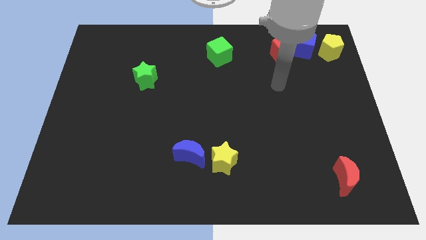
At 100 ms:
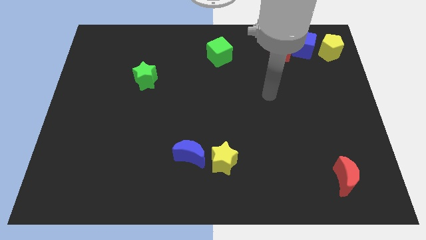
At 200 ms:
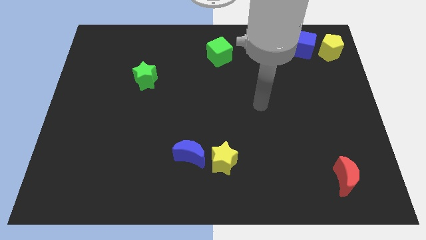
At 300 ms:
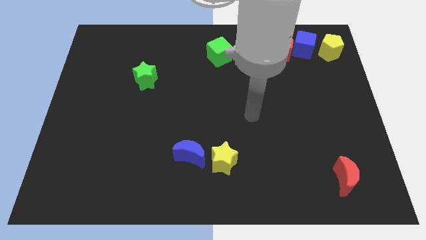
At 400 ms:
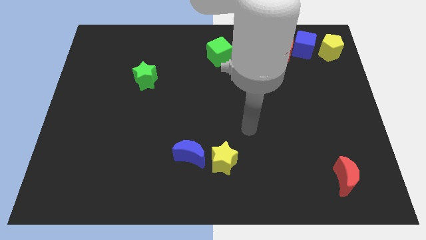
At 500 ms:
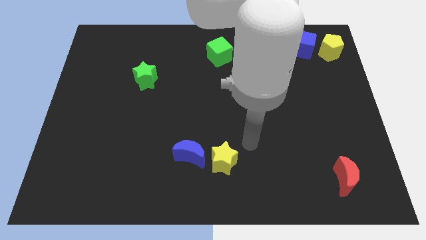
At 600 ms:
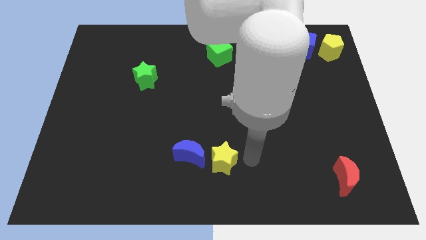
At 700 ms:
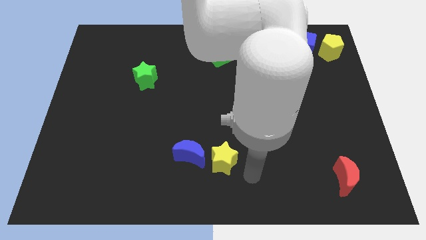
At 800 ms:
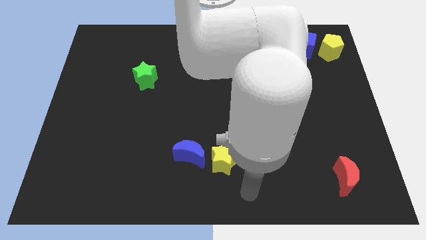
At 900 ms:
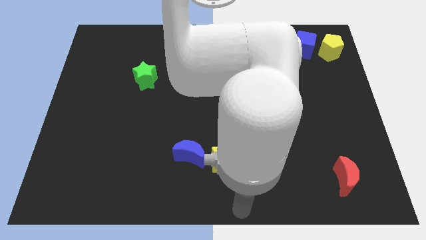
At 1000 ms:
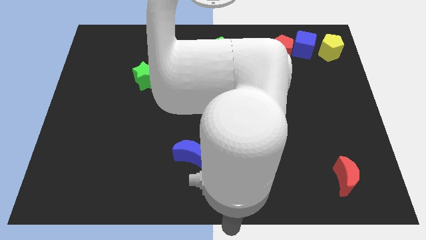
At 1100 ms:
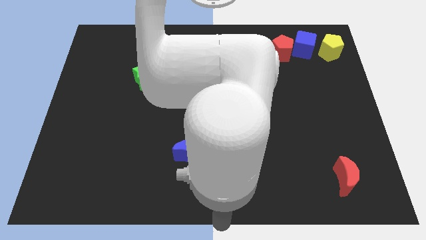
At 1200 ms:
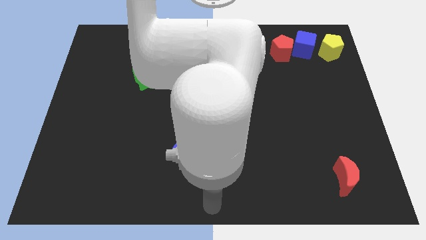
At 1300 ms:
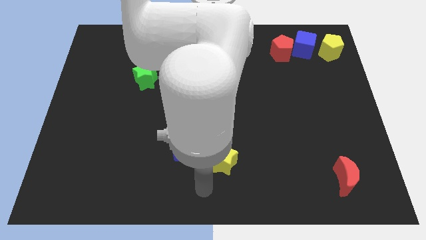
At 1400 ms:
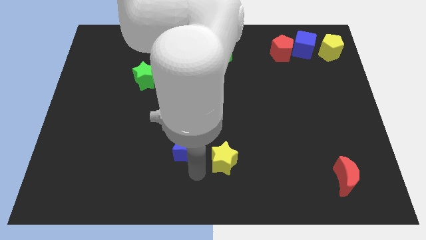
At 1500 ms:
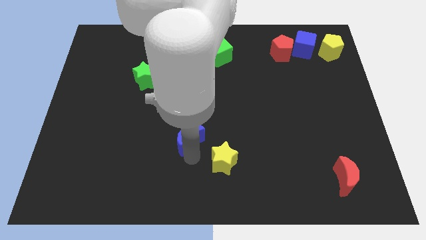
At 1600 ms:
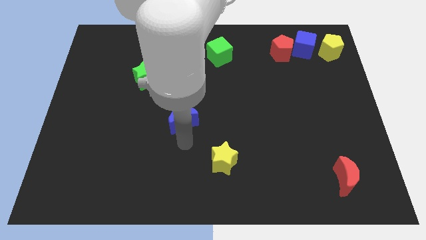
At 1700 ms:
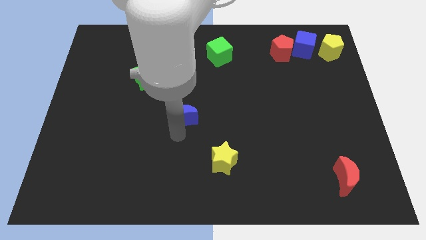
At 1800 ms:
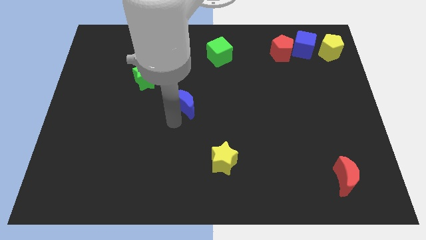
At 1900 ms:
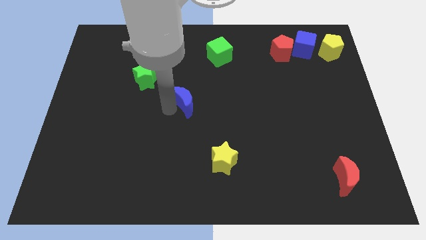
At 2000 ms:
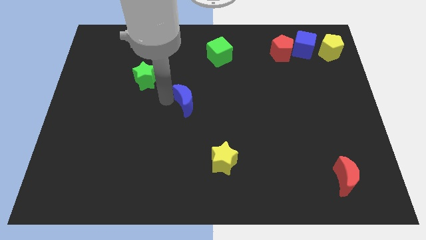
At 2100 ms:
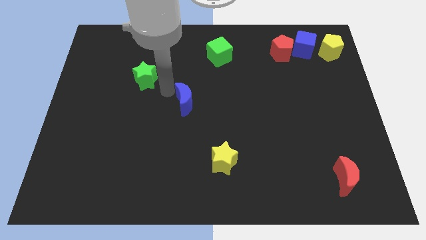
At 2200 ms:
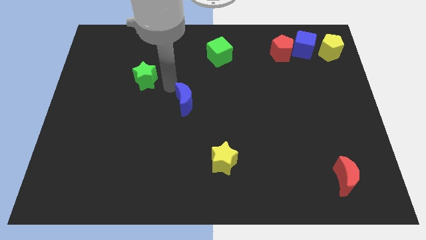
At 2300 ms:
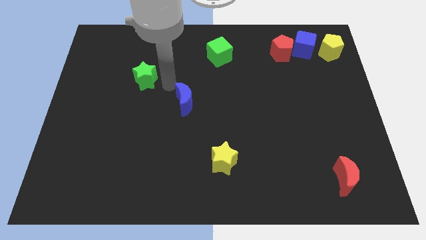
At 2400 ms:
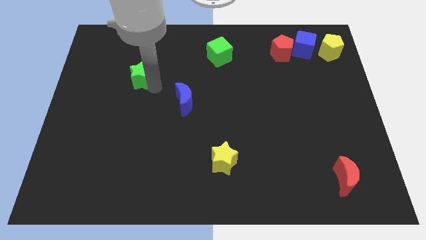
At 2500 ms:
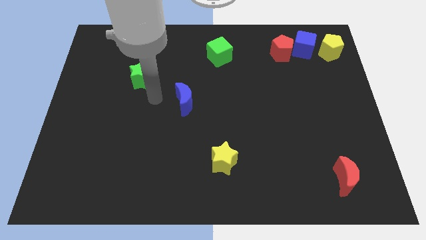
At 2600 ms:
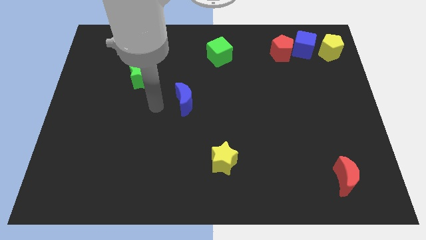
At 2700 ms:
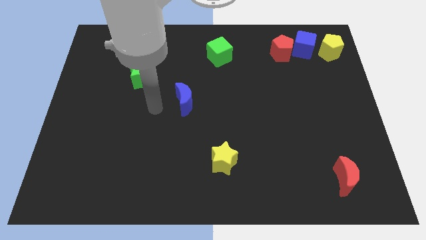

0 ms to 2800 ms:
push the blue crescent to the top of the board

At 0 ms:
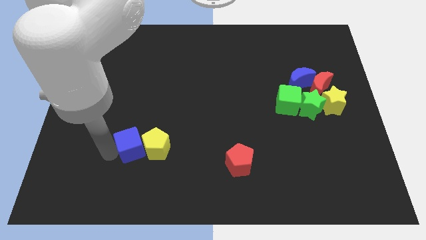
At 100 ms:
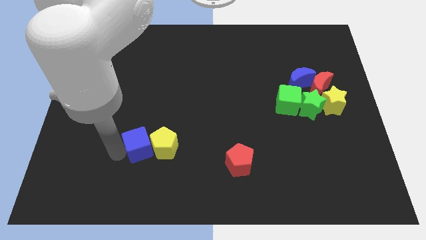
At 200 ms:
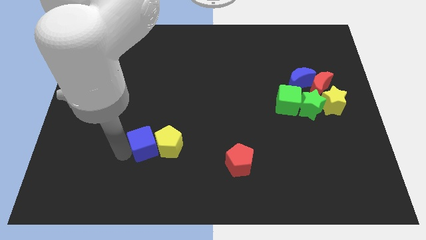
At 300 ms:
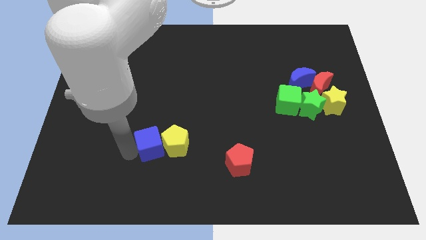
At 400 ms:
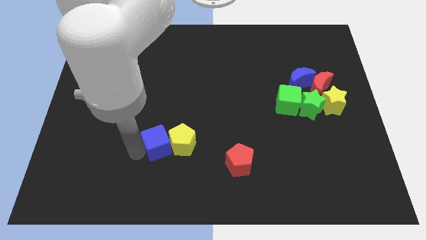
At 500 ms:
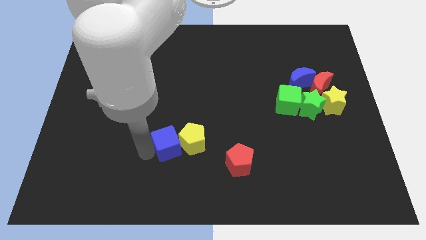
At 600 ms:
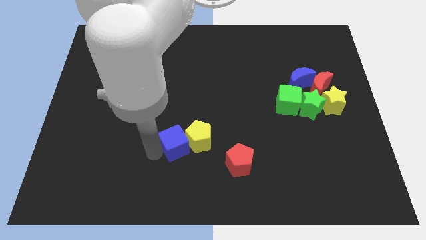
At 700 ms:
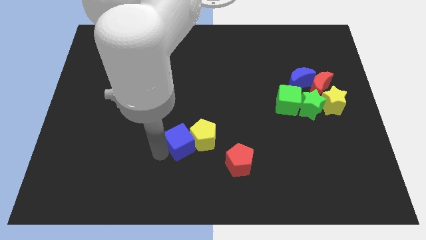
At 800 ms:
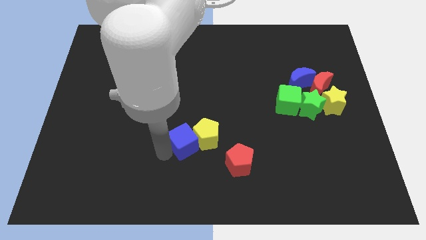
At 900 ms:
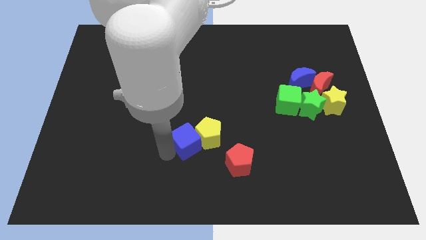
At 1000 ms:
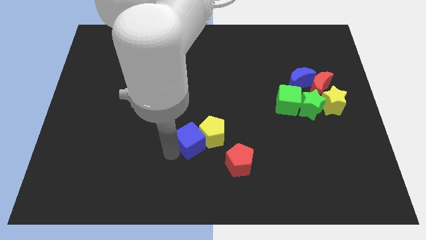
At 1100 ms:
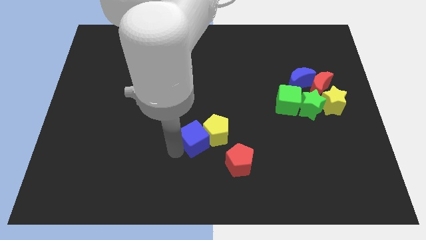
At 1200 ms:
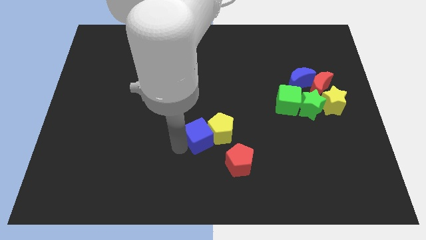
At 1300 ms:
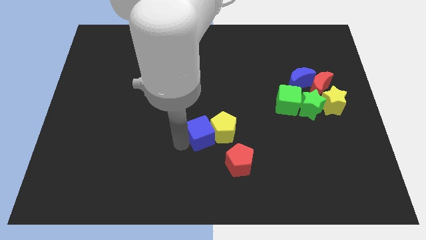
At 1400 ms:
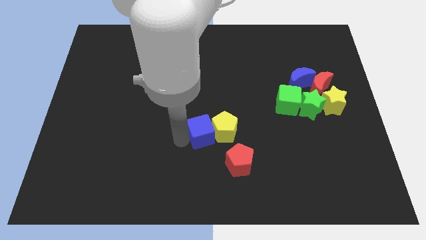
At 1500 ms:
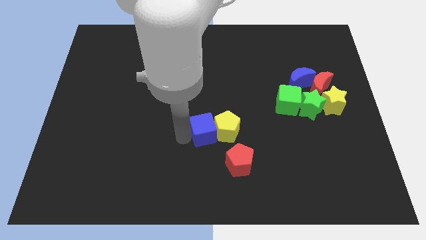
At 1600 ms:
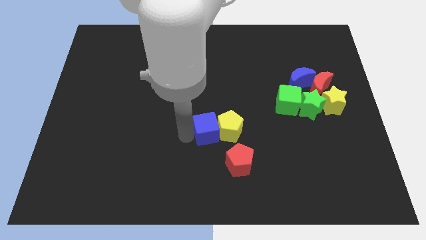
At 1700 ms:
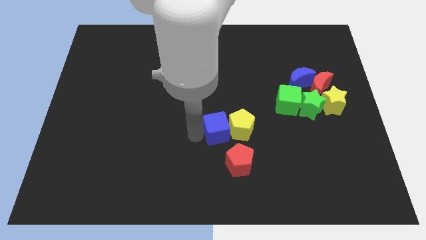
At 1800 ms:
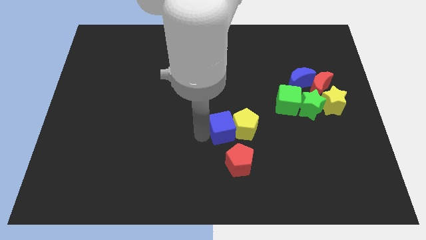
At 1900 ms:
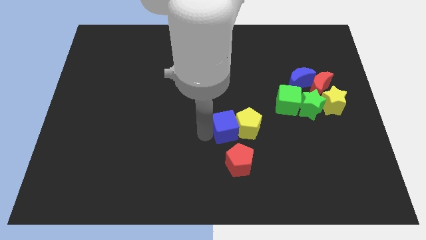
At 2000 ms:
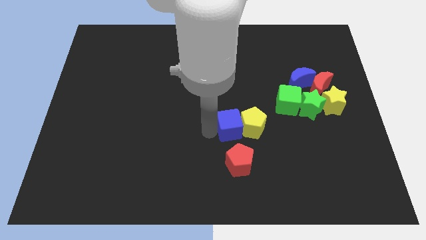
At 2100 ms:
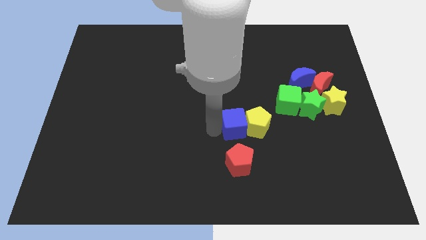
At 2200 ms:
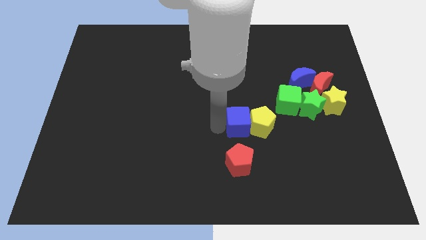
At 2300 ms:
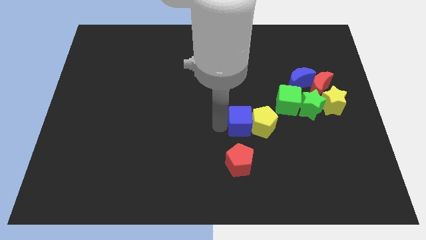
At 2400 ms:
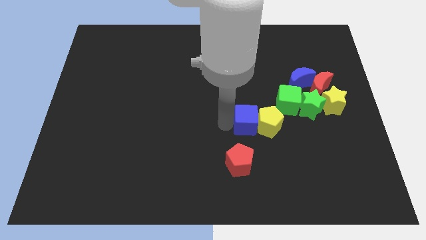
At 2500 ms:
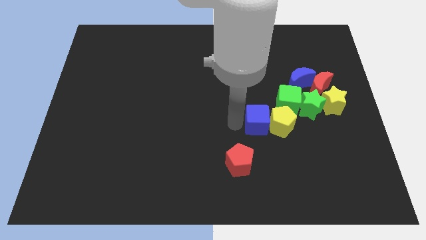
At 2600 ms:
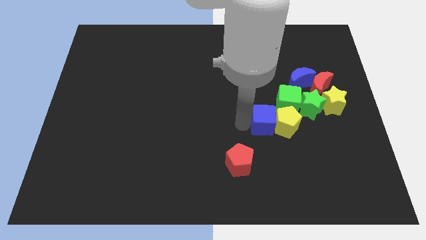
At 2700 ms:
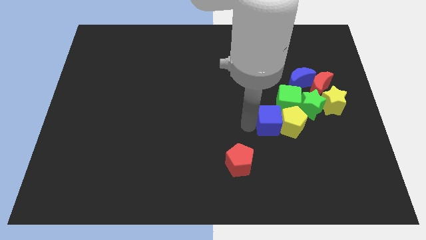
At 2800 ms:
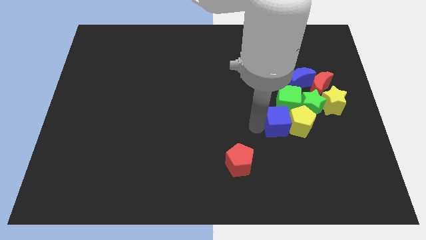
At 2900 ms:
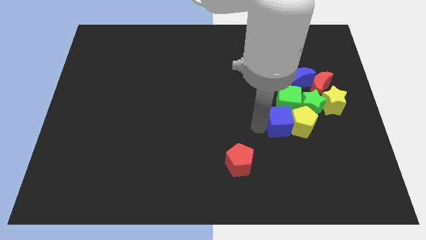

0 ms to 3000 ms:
push the blue cube along with yellow pentagon towards right side of the board

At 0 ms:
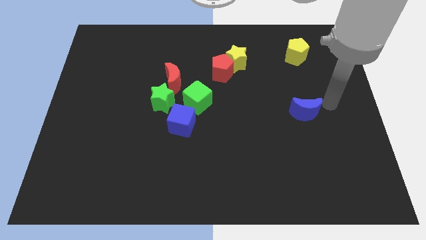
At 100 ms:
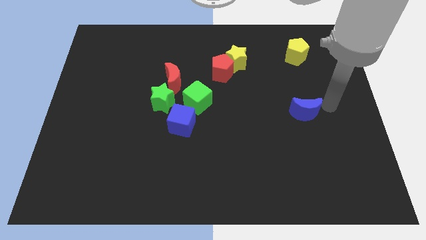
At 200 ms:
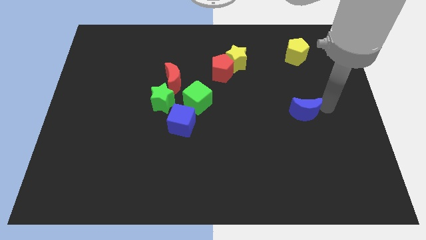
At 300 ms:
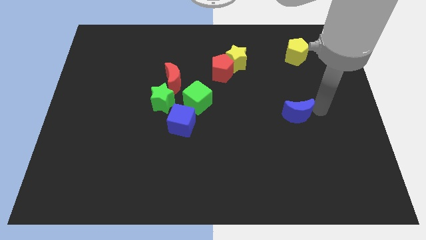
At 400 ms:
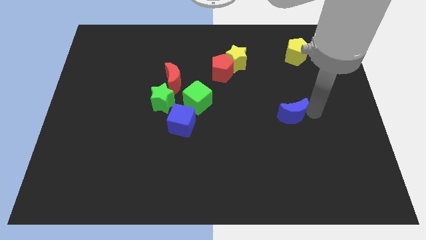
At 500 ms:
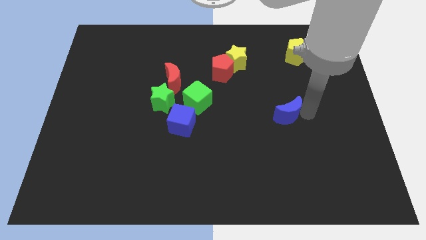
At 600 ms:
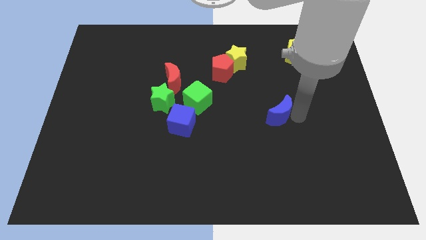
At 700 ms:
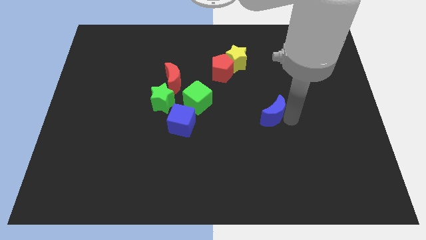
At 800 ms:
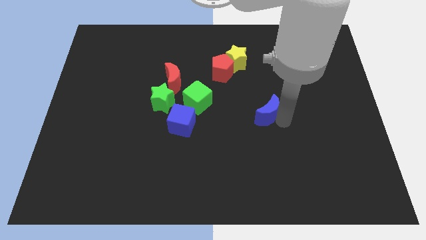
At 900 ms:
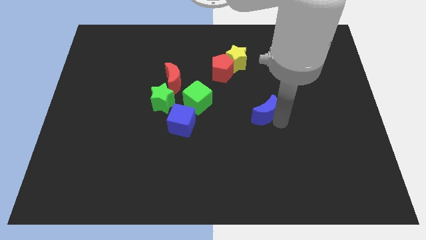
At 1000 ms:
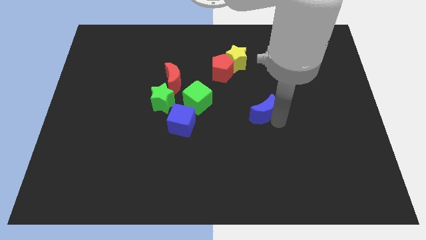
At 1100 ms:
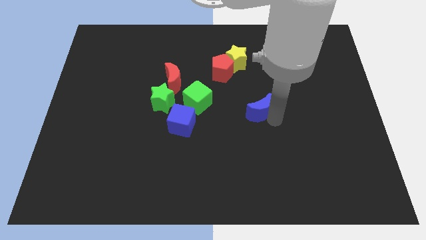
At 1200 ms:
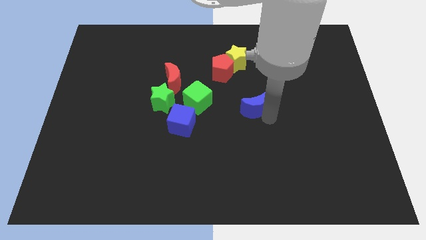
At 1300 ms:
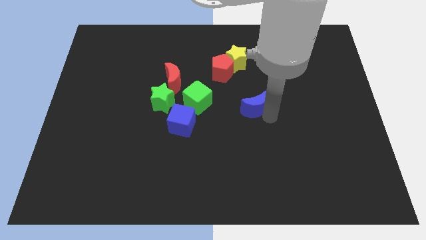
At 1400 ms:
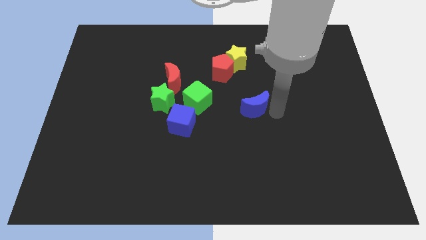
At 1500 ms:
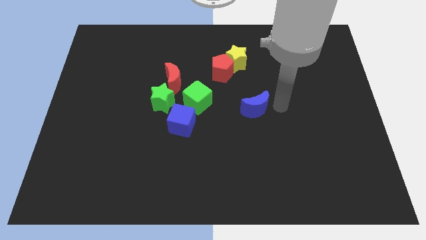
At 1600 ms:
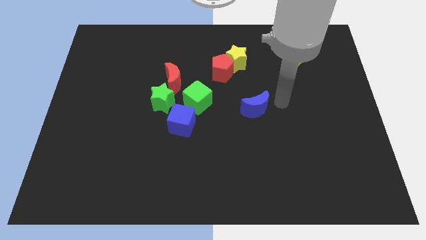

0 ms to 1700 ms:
push blue crescent to the right of the green cube

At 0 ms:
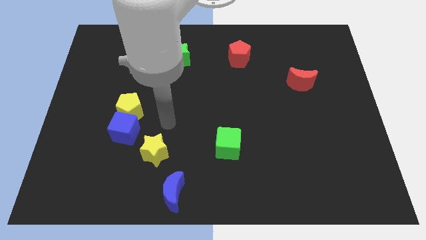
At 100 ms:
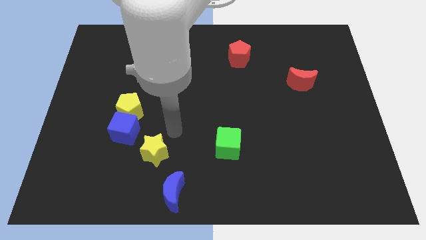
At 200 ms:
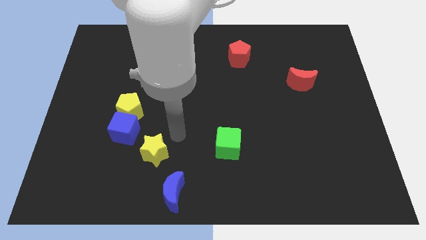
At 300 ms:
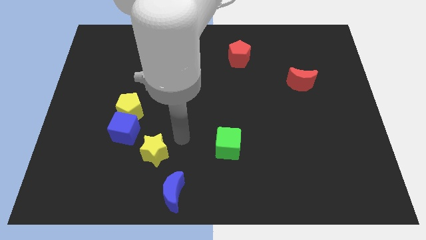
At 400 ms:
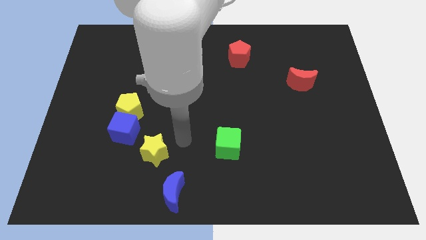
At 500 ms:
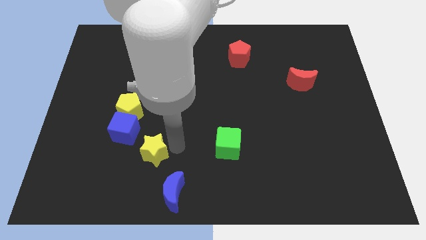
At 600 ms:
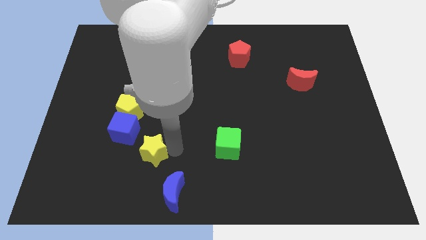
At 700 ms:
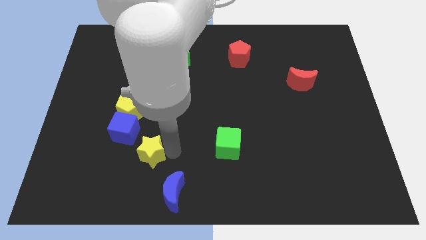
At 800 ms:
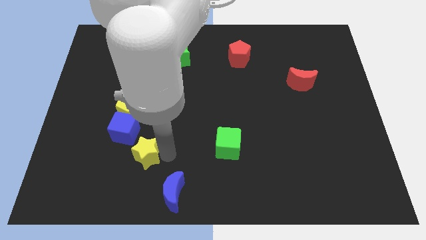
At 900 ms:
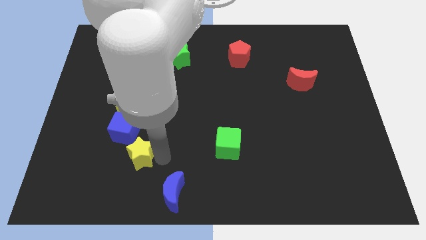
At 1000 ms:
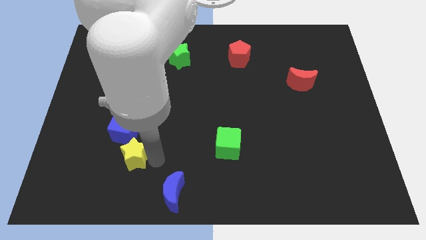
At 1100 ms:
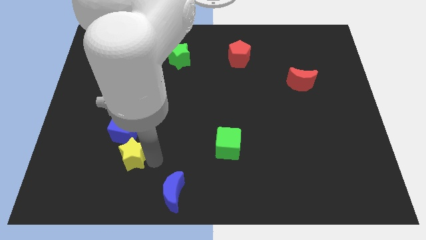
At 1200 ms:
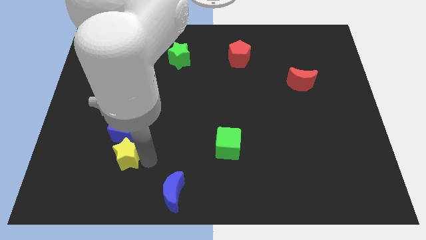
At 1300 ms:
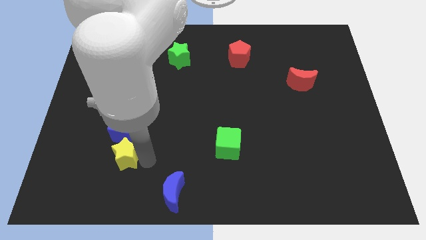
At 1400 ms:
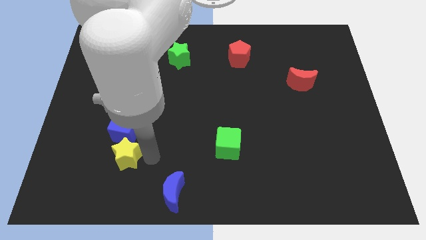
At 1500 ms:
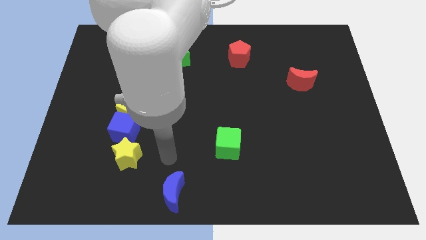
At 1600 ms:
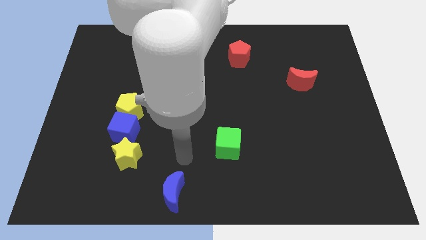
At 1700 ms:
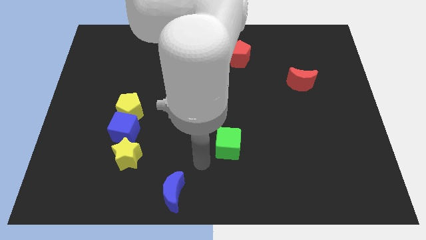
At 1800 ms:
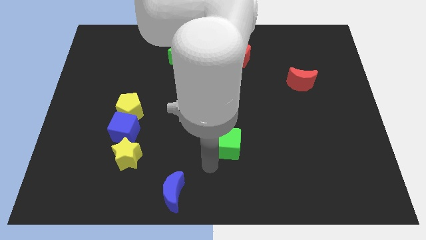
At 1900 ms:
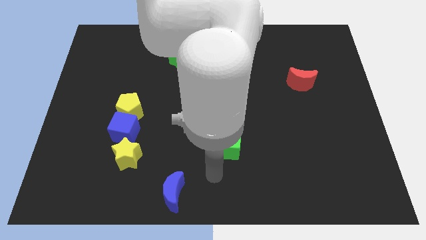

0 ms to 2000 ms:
place the yellow star below the blue cube
